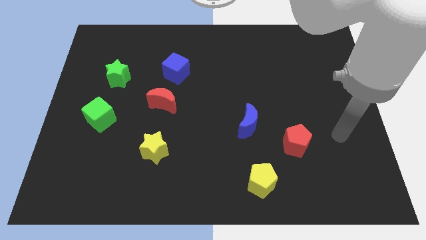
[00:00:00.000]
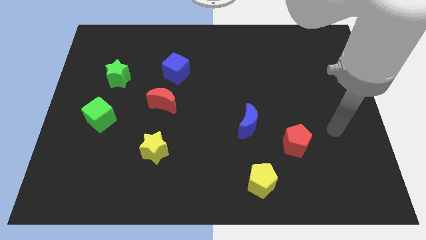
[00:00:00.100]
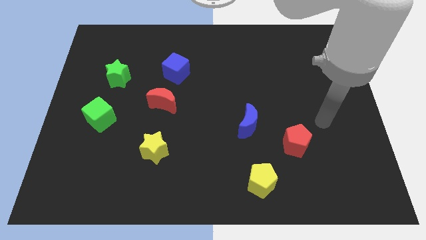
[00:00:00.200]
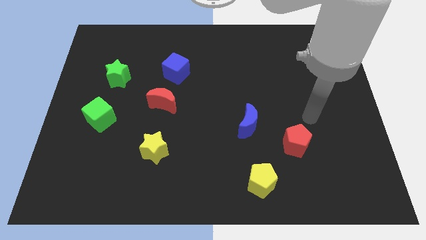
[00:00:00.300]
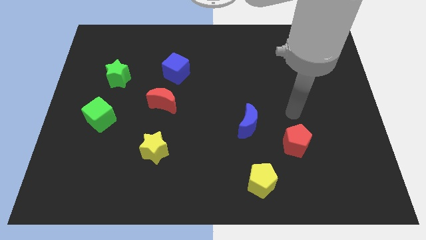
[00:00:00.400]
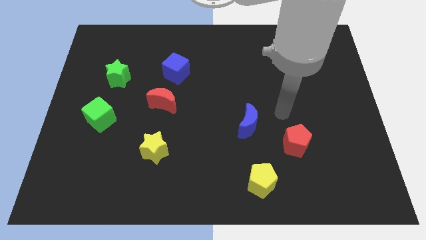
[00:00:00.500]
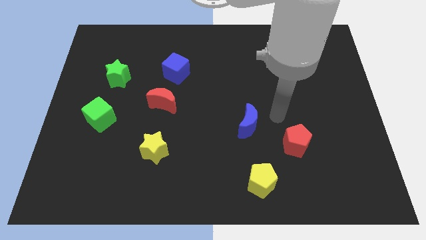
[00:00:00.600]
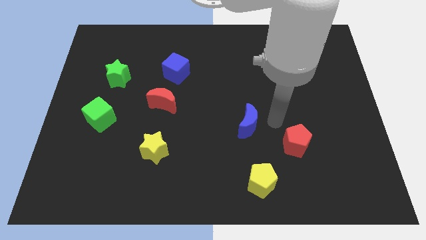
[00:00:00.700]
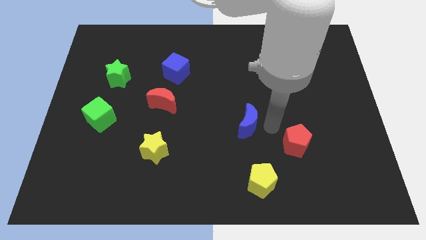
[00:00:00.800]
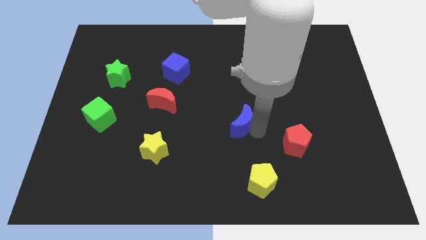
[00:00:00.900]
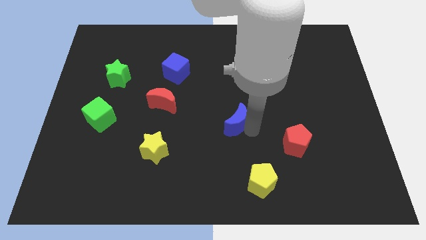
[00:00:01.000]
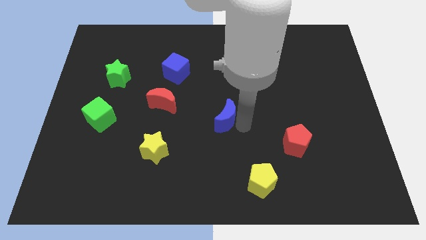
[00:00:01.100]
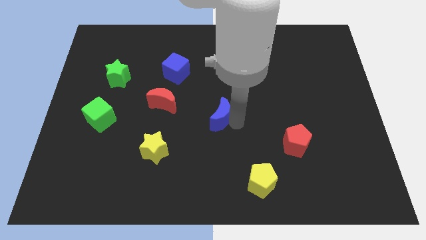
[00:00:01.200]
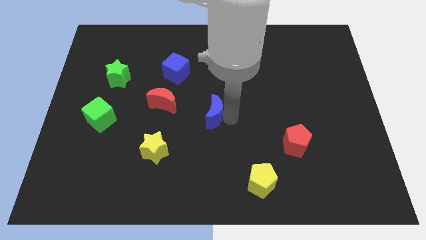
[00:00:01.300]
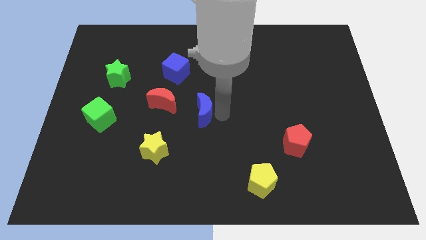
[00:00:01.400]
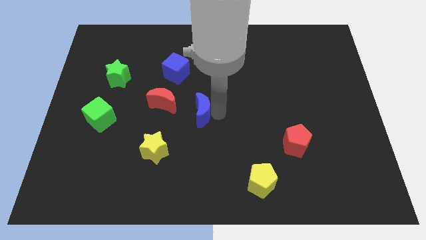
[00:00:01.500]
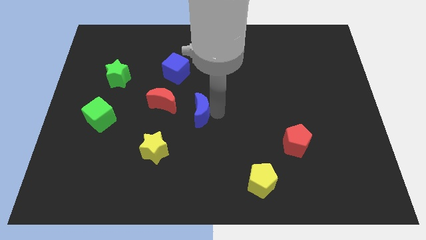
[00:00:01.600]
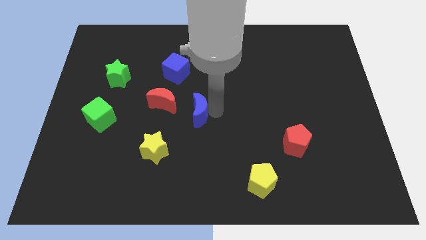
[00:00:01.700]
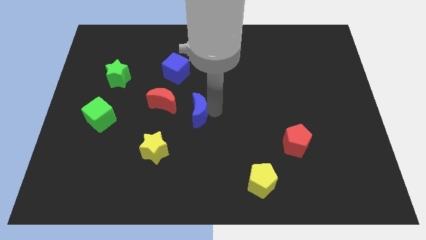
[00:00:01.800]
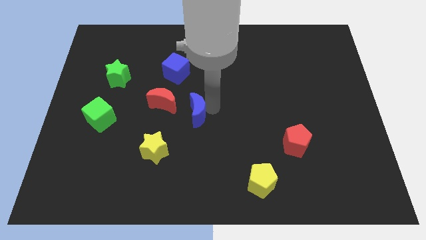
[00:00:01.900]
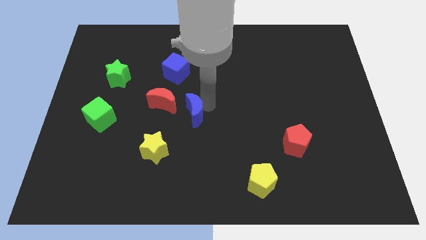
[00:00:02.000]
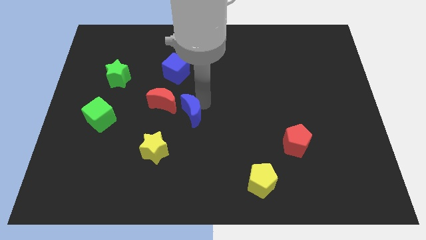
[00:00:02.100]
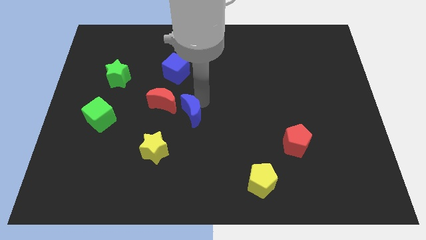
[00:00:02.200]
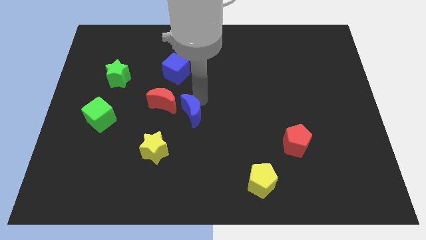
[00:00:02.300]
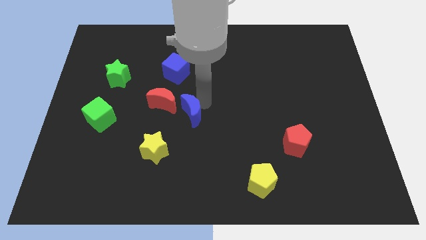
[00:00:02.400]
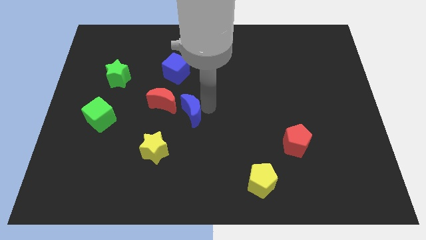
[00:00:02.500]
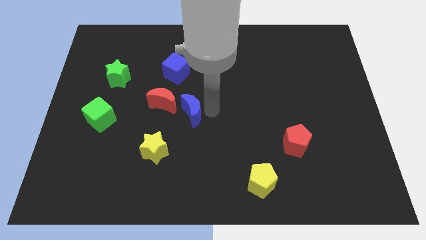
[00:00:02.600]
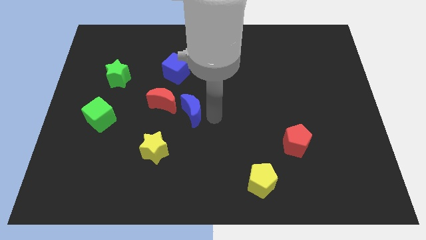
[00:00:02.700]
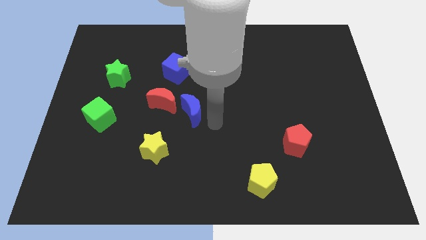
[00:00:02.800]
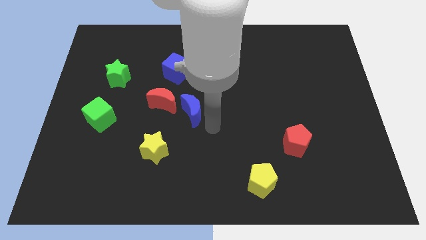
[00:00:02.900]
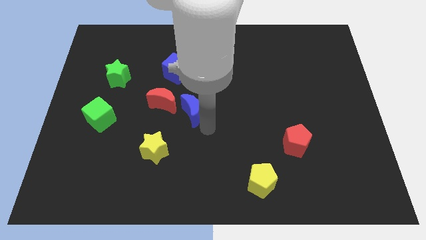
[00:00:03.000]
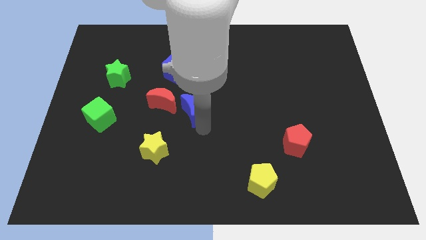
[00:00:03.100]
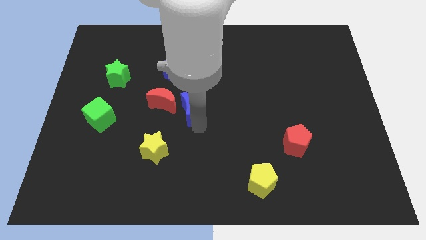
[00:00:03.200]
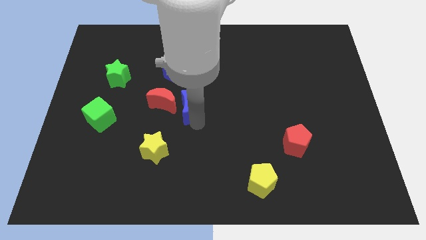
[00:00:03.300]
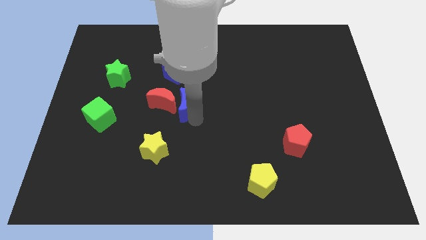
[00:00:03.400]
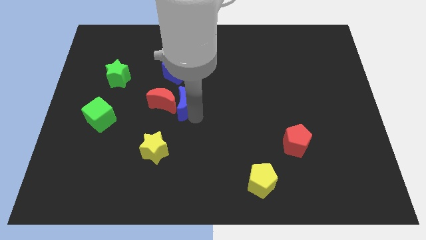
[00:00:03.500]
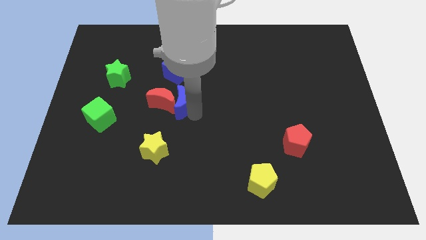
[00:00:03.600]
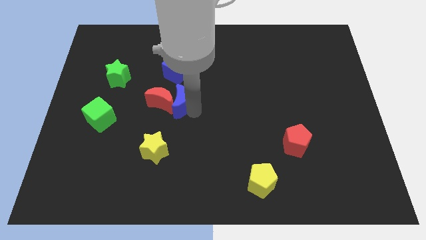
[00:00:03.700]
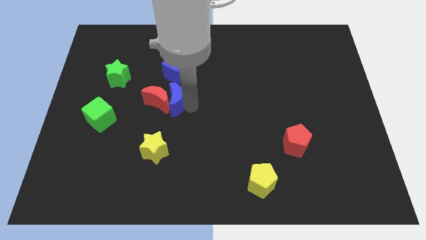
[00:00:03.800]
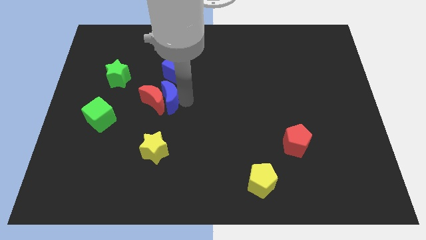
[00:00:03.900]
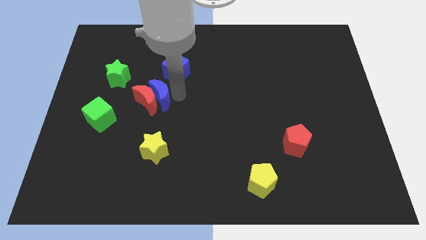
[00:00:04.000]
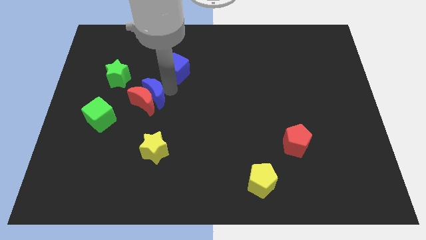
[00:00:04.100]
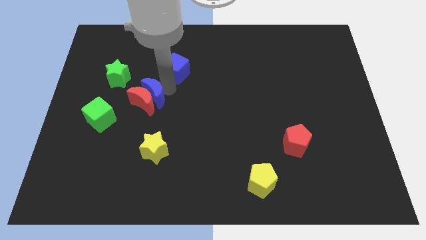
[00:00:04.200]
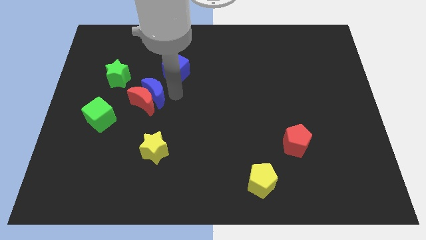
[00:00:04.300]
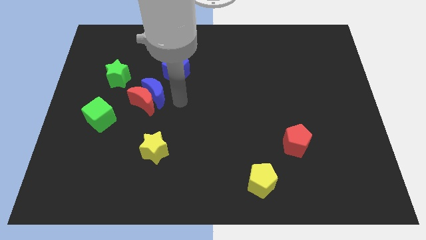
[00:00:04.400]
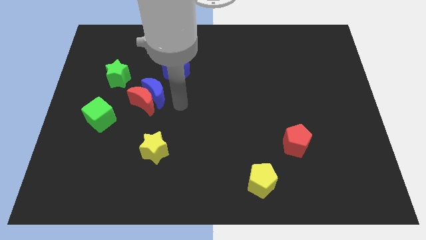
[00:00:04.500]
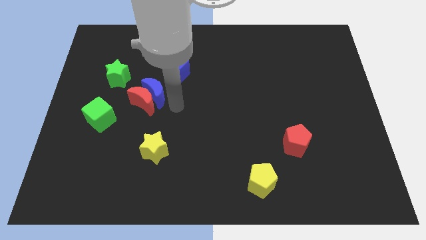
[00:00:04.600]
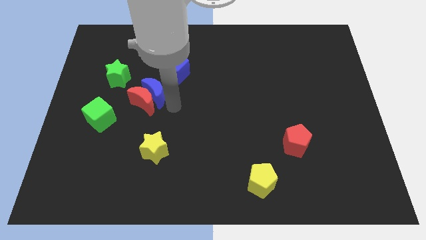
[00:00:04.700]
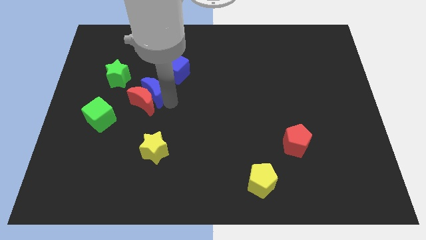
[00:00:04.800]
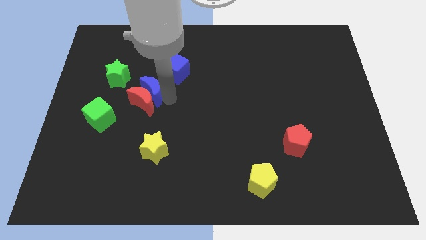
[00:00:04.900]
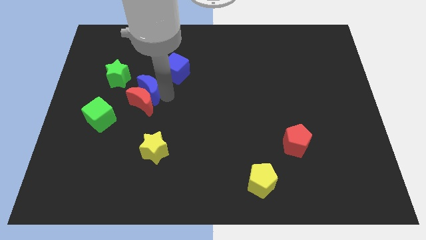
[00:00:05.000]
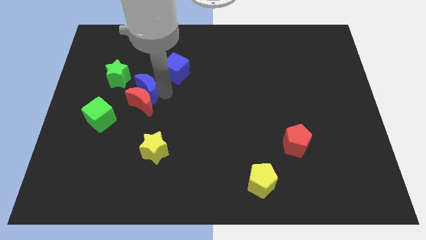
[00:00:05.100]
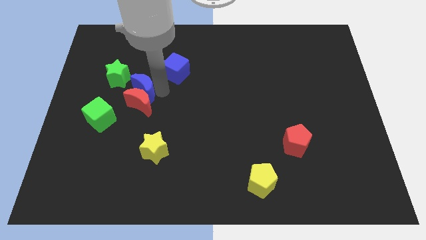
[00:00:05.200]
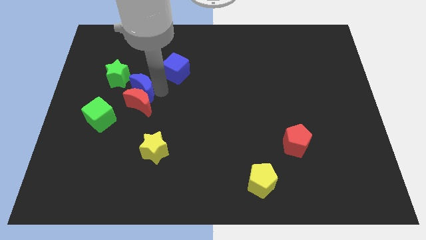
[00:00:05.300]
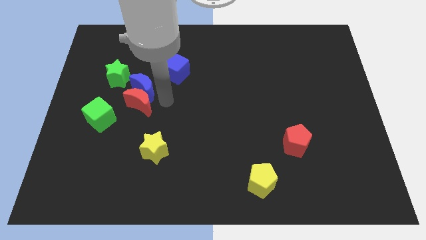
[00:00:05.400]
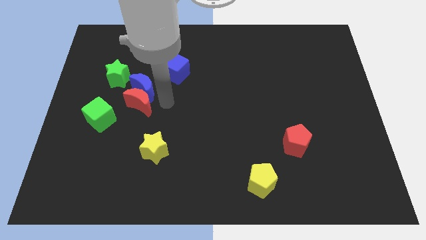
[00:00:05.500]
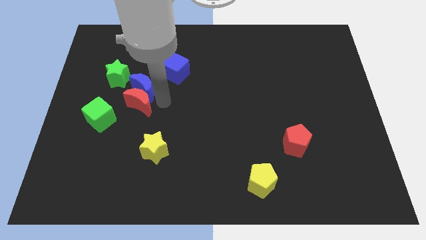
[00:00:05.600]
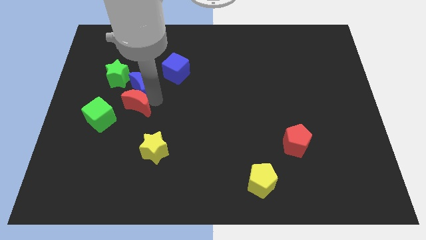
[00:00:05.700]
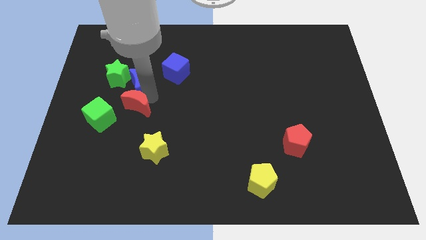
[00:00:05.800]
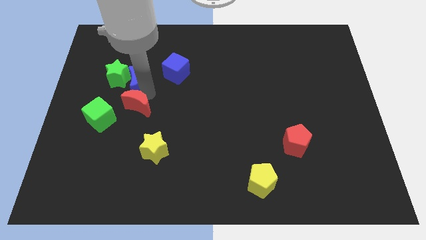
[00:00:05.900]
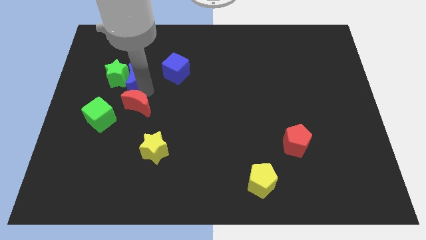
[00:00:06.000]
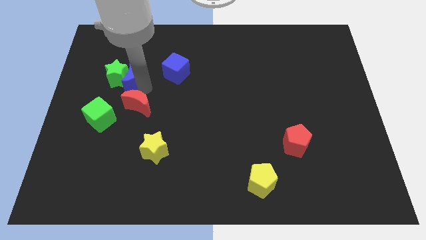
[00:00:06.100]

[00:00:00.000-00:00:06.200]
move the blue moon next to the green star

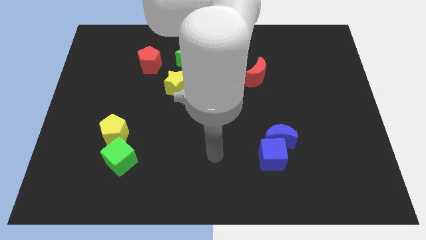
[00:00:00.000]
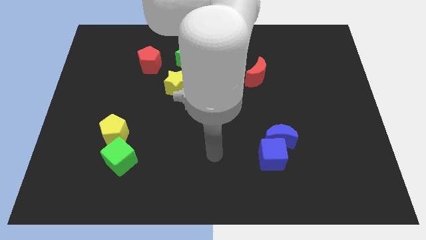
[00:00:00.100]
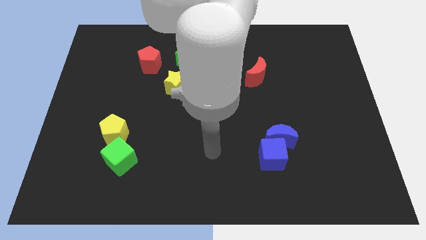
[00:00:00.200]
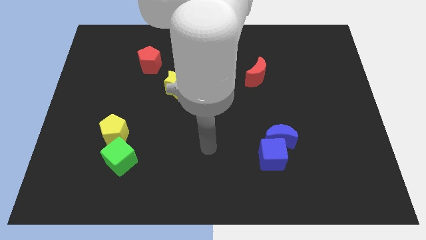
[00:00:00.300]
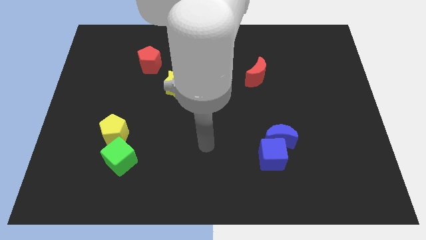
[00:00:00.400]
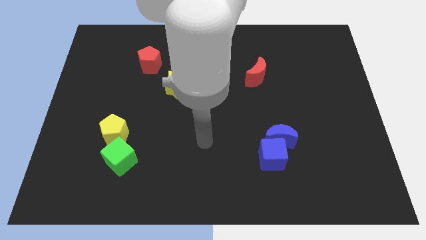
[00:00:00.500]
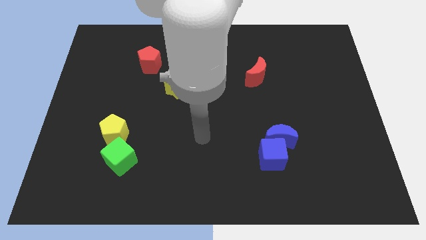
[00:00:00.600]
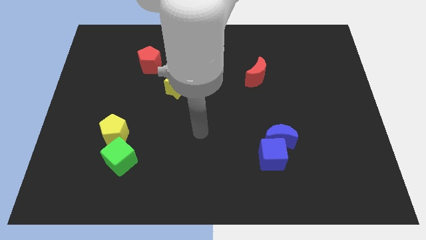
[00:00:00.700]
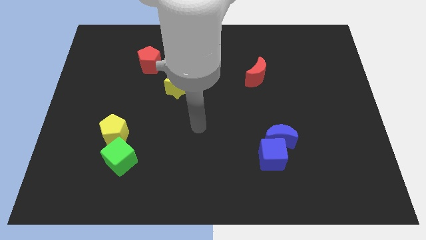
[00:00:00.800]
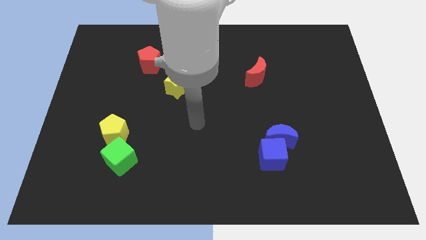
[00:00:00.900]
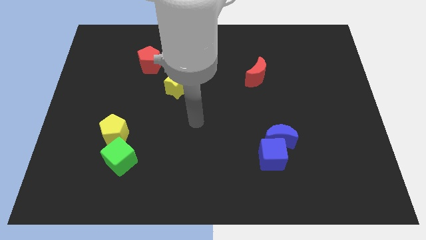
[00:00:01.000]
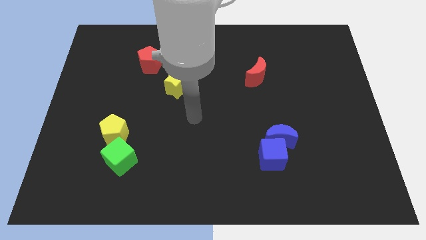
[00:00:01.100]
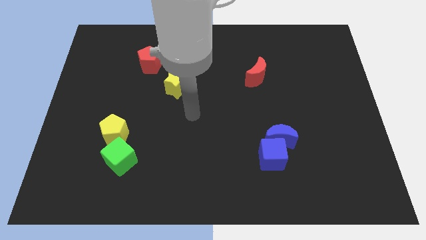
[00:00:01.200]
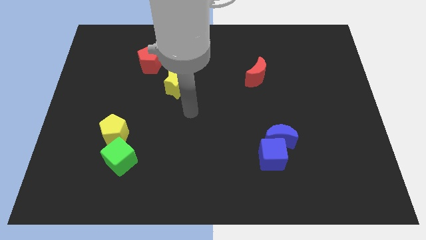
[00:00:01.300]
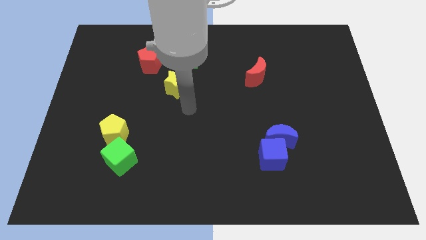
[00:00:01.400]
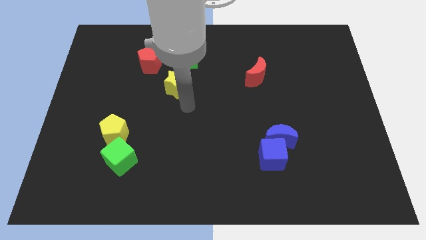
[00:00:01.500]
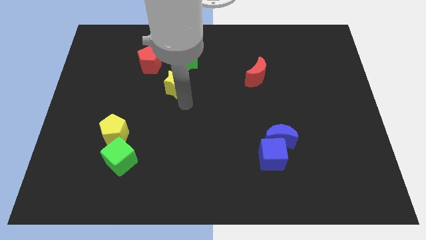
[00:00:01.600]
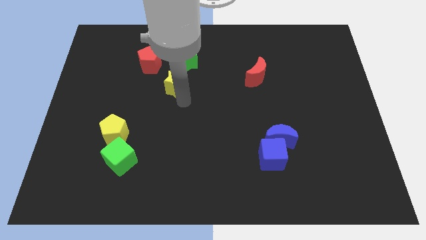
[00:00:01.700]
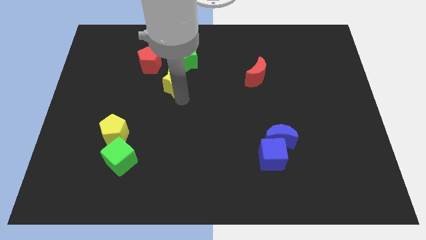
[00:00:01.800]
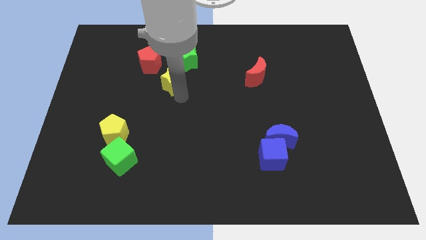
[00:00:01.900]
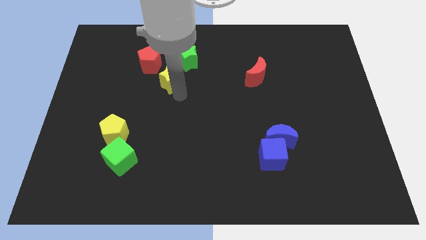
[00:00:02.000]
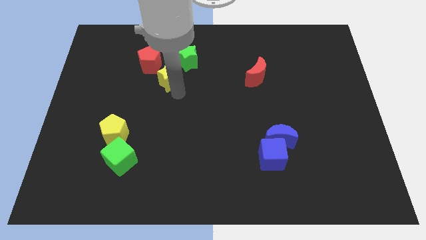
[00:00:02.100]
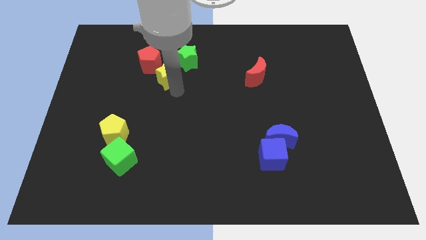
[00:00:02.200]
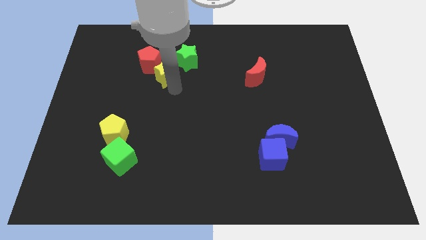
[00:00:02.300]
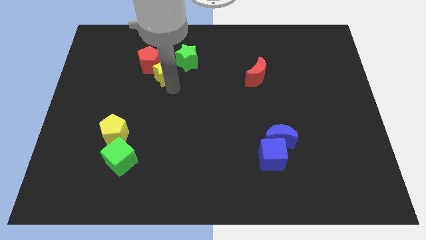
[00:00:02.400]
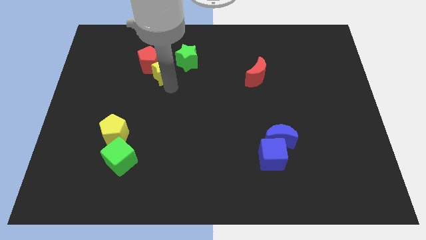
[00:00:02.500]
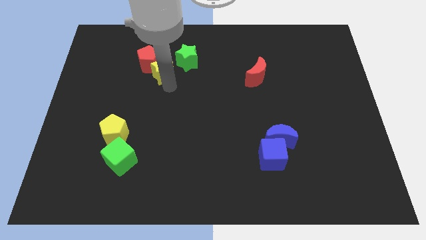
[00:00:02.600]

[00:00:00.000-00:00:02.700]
put the yellow star to the red pentagon
